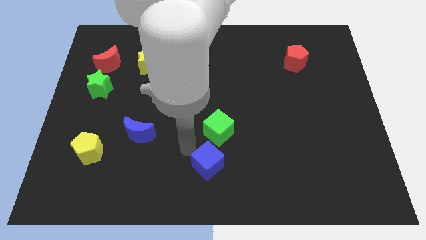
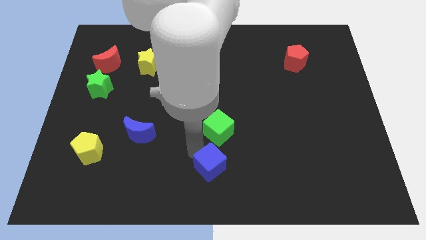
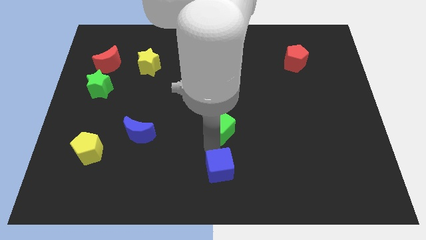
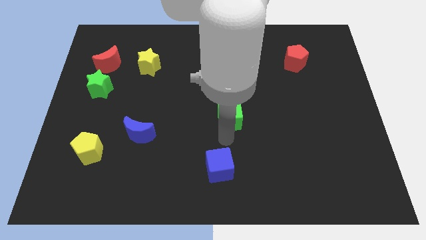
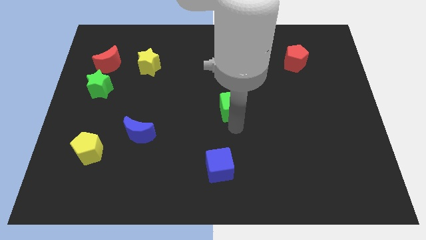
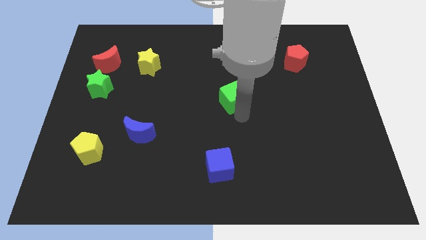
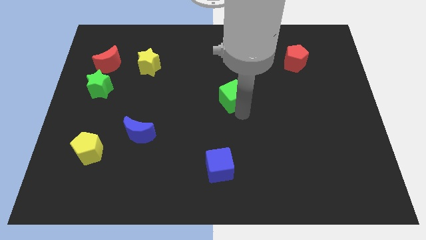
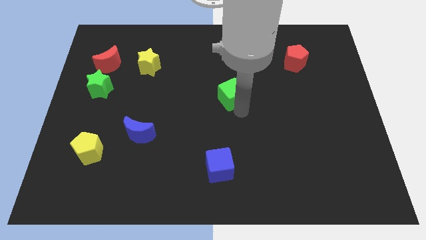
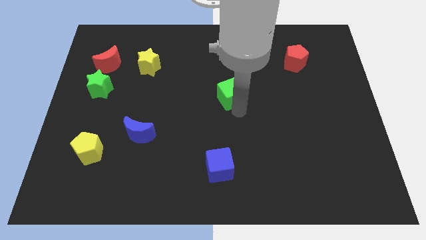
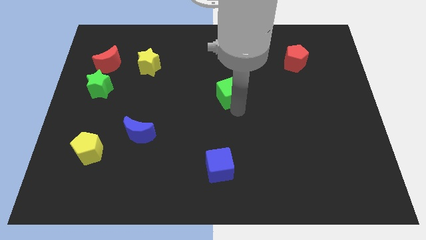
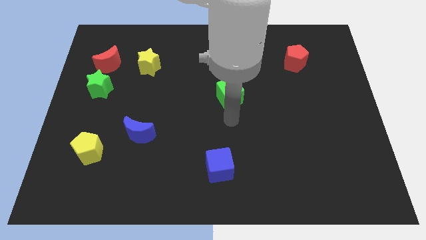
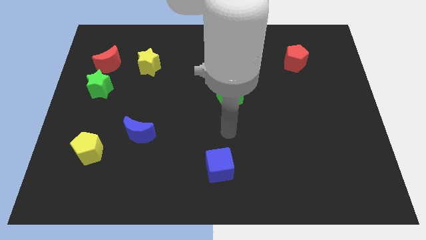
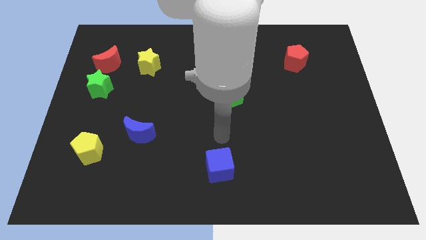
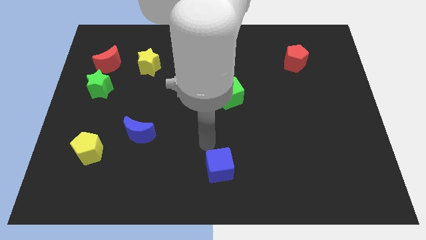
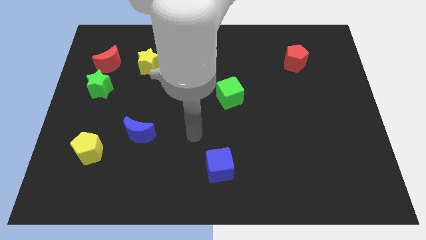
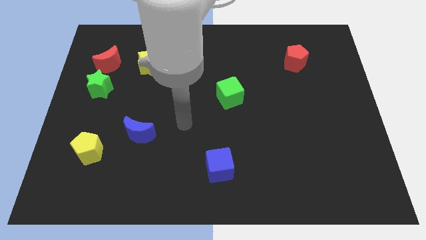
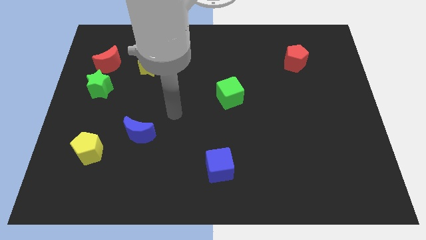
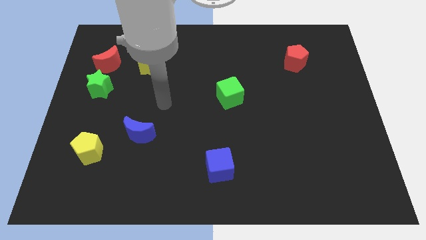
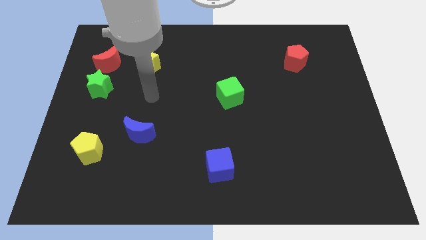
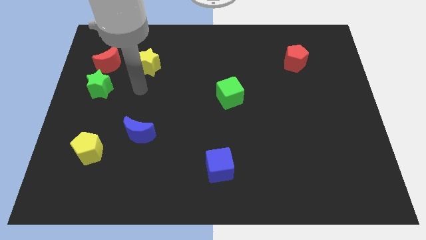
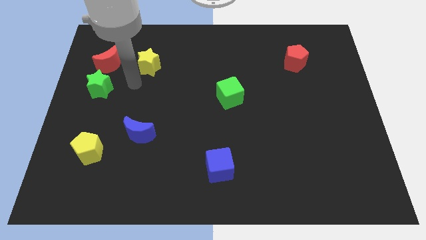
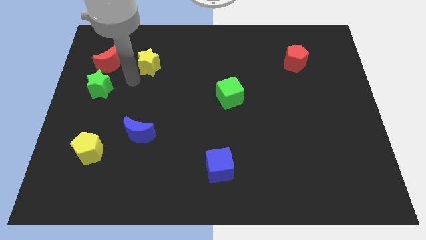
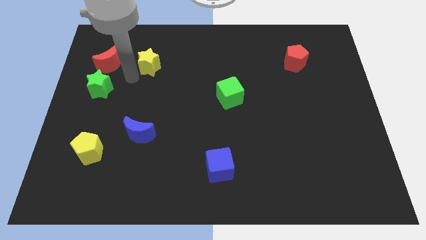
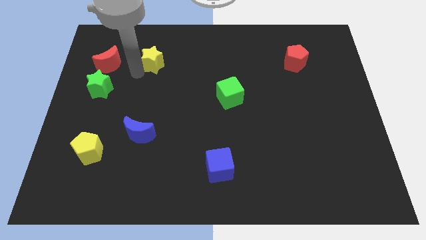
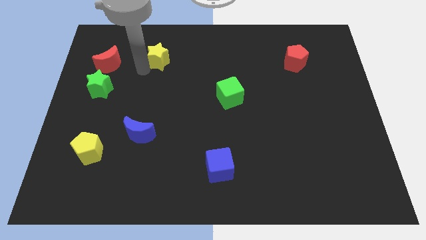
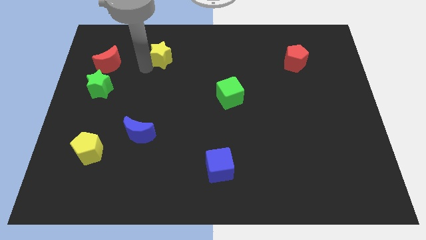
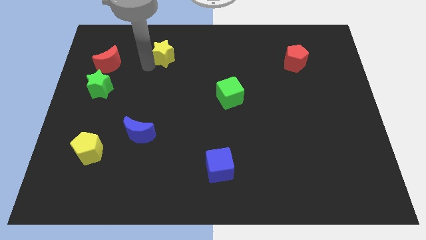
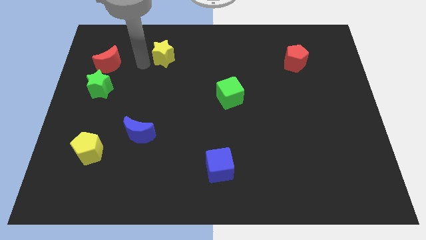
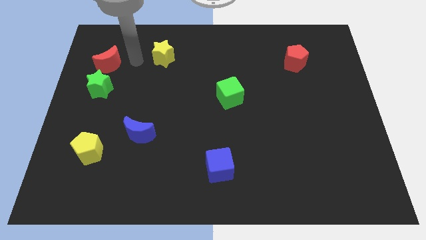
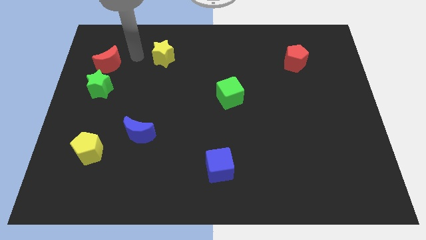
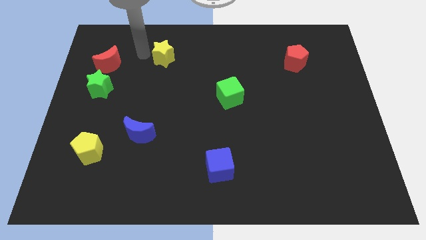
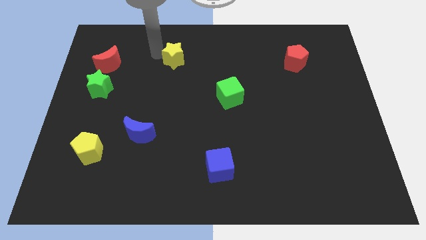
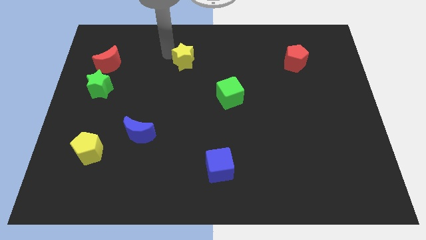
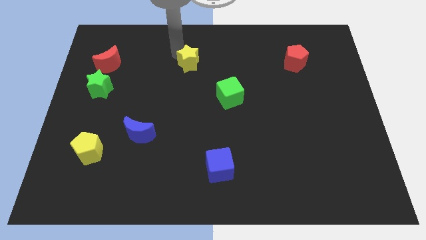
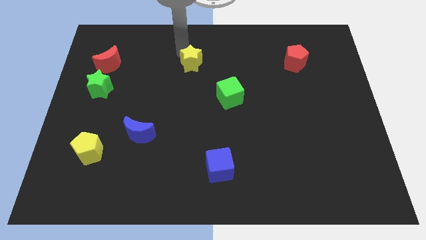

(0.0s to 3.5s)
push the green cube and yellow star towards the centre of the board

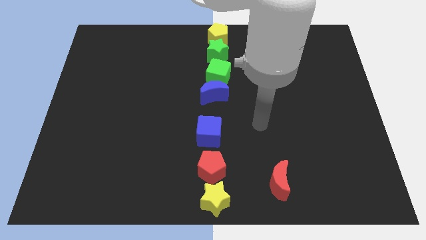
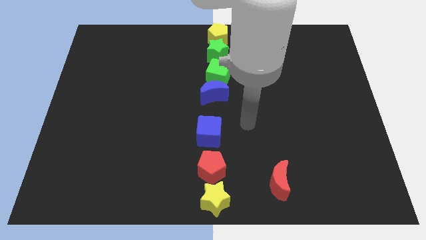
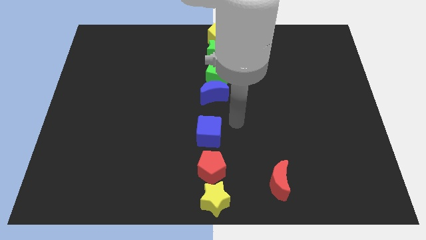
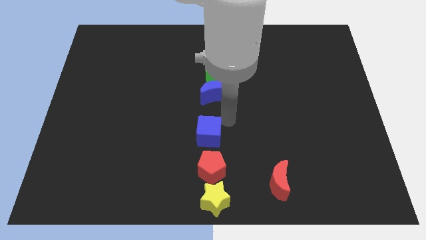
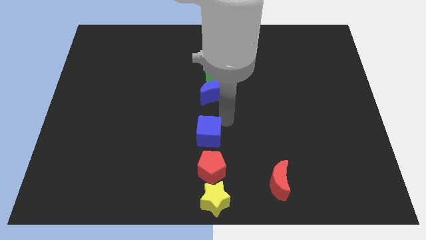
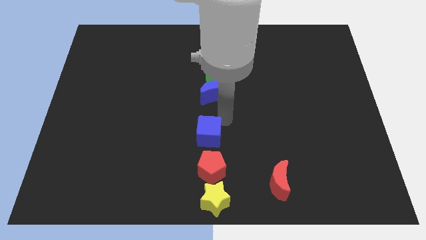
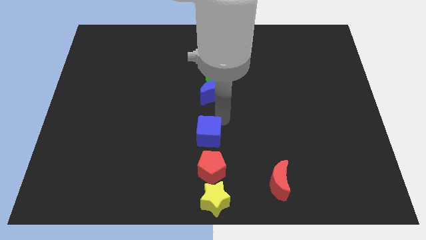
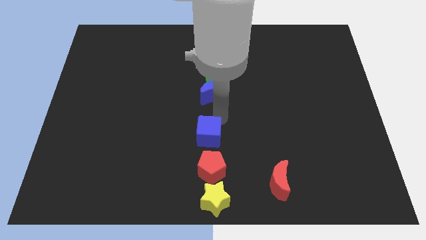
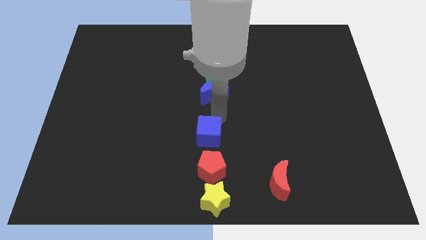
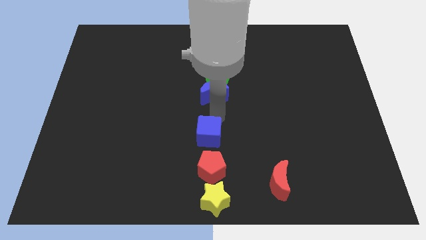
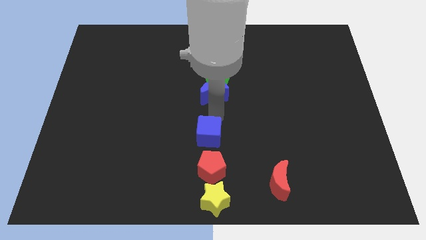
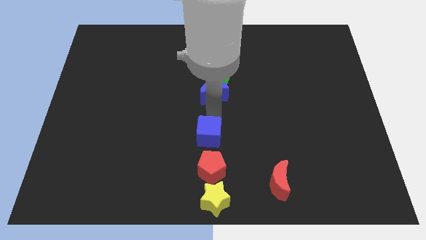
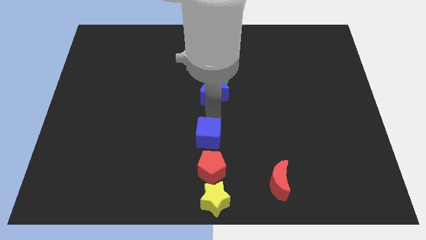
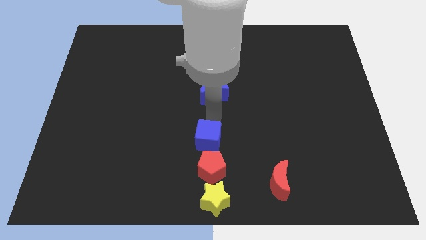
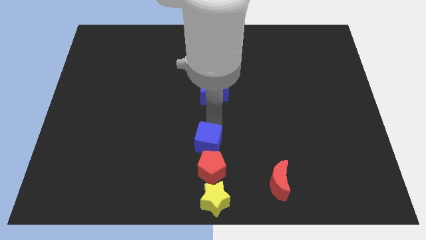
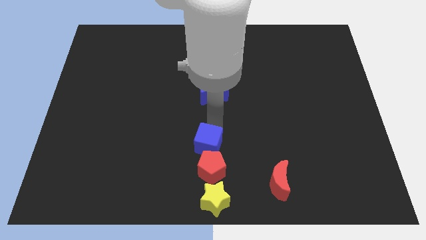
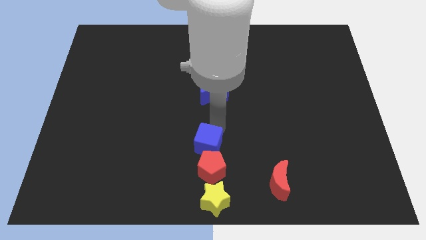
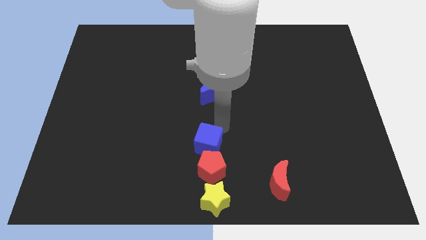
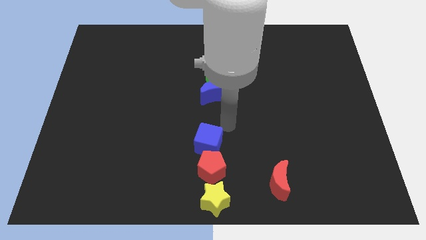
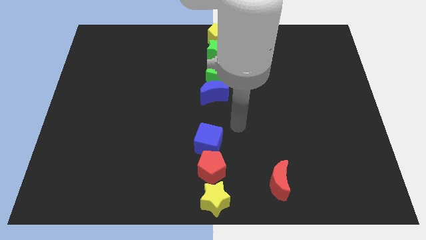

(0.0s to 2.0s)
slightly move the blue cube toward down

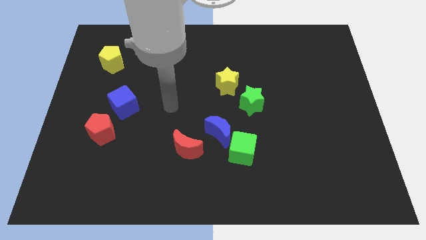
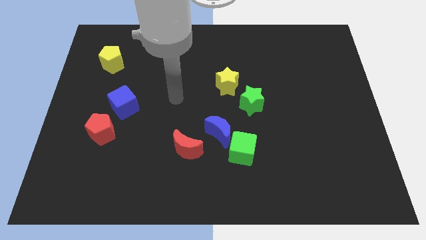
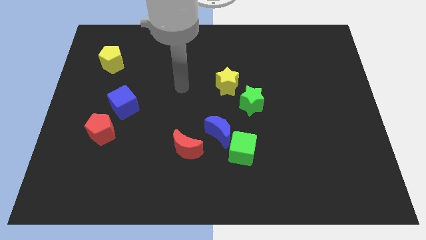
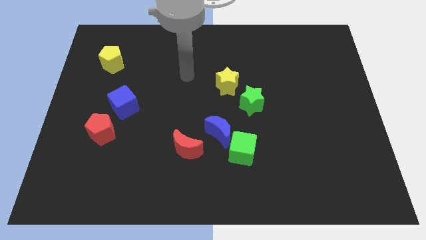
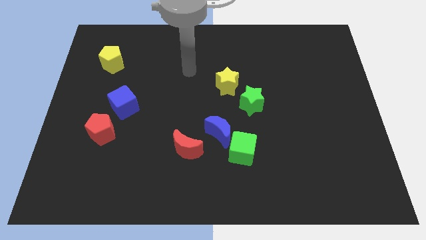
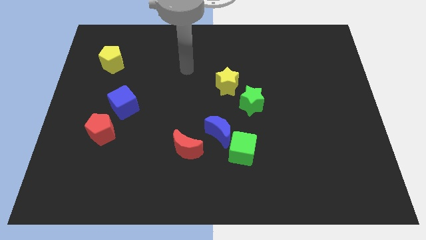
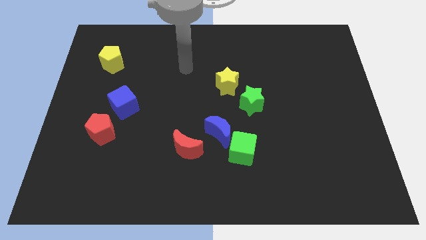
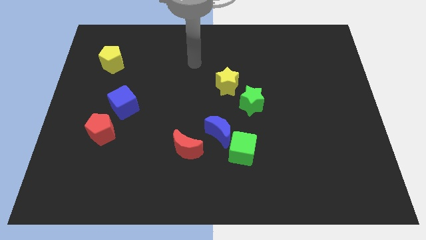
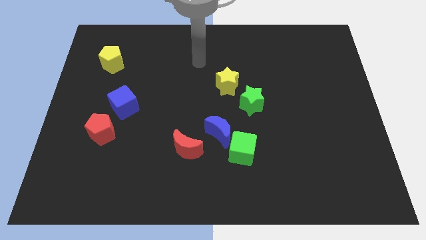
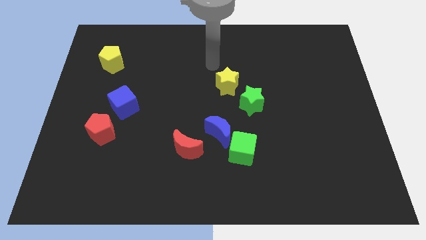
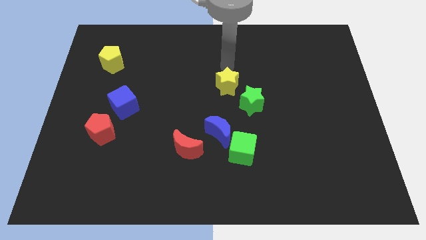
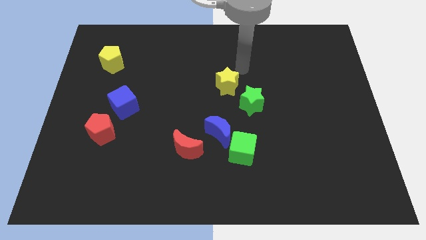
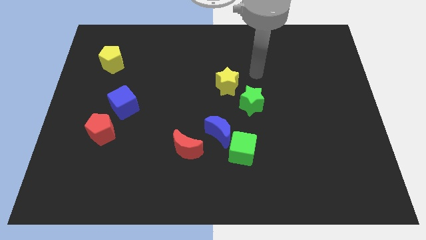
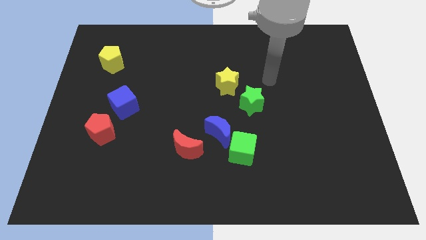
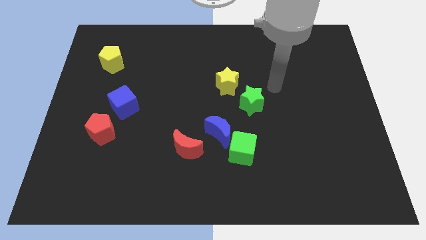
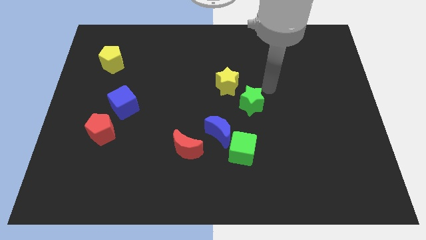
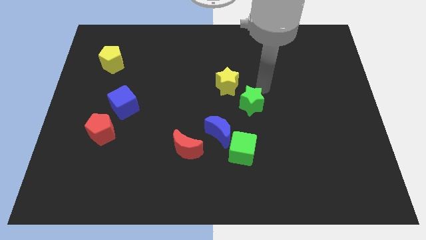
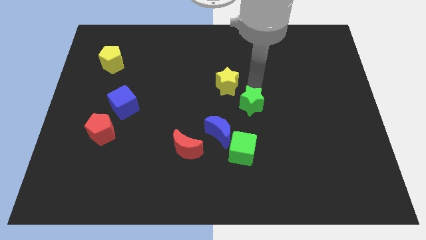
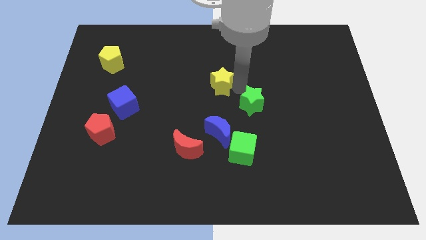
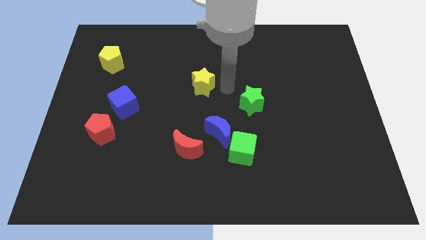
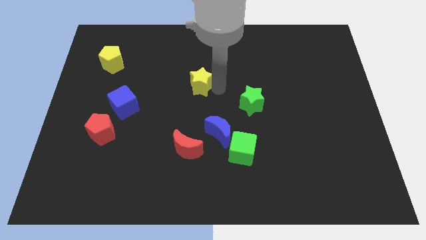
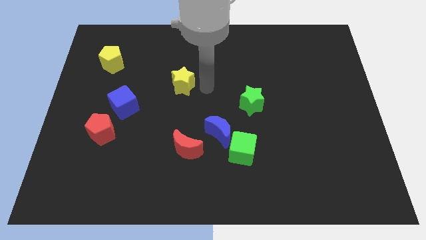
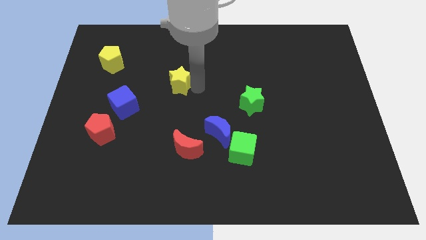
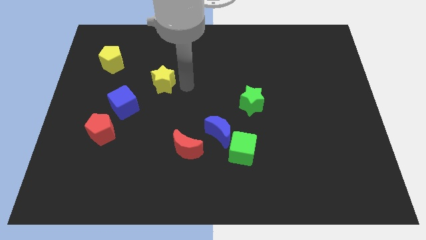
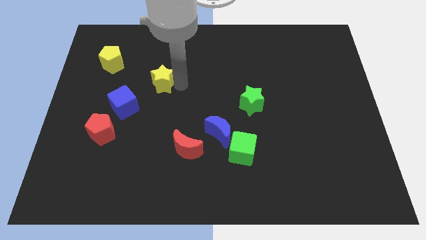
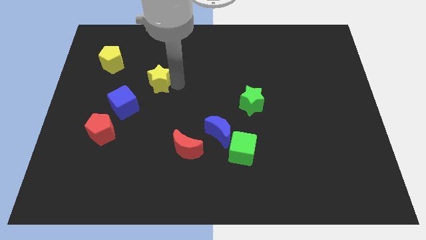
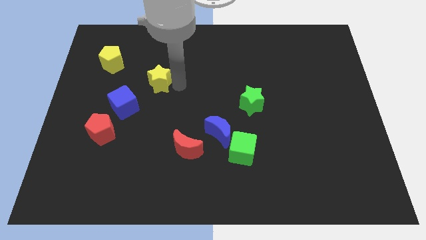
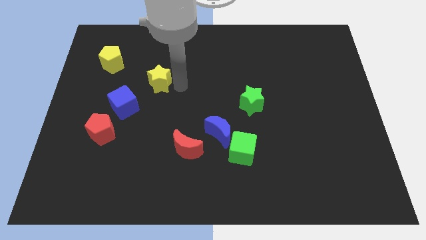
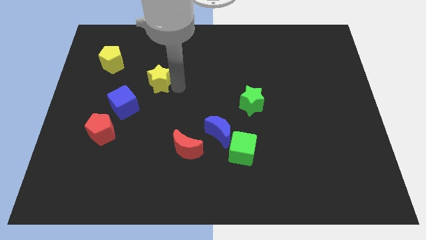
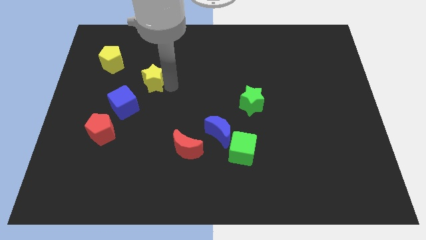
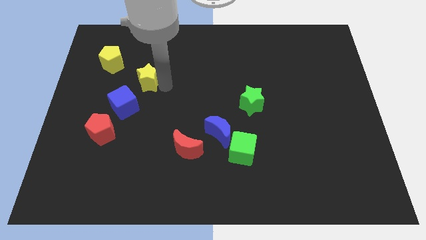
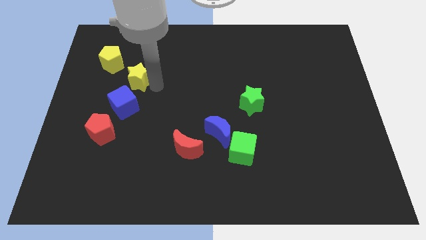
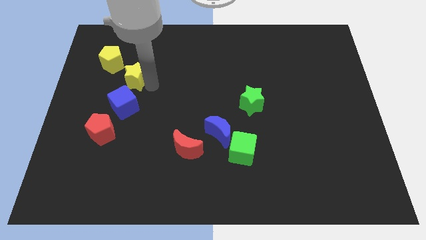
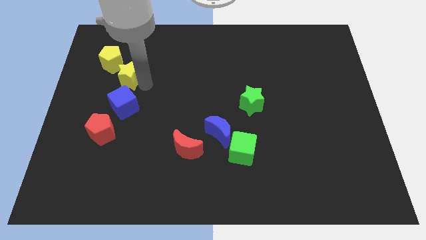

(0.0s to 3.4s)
push the yellow star to the top of the blue cube
